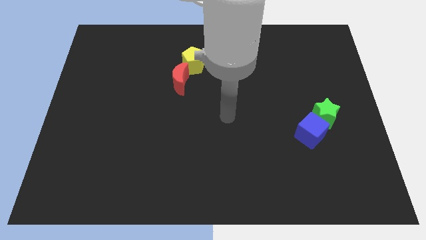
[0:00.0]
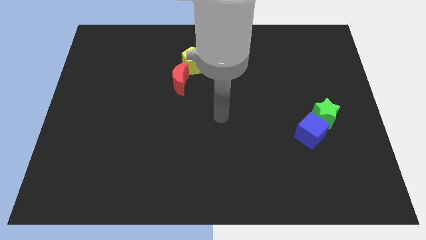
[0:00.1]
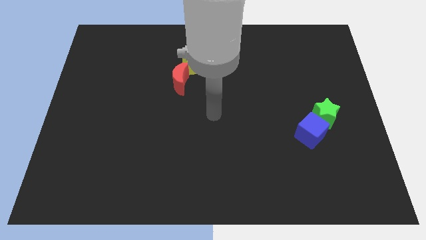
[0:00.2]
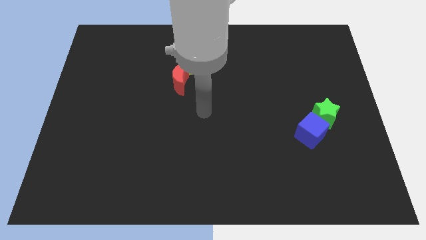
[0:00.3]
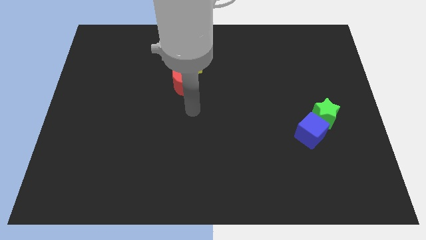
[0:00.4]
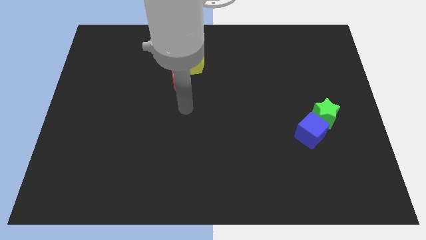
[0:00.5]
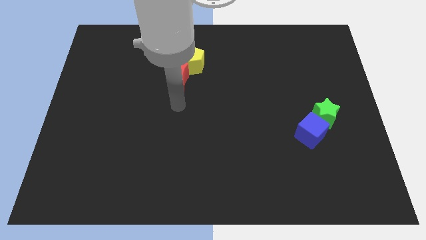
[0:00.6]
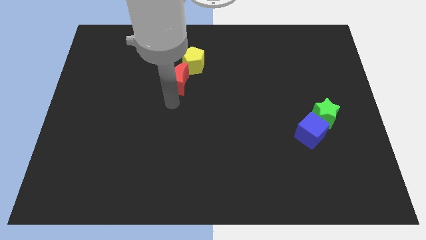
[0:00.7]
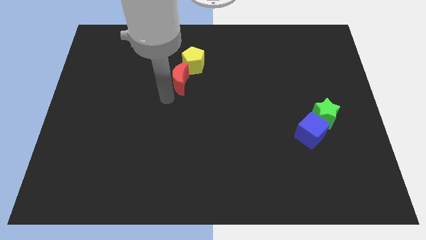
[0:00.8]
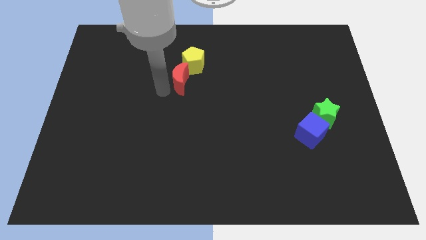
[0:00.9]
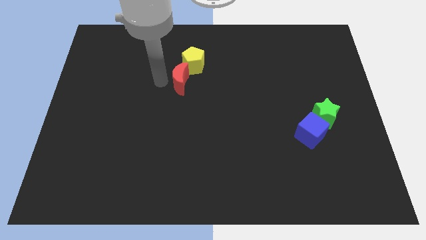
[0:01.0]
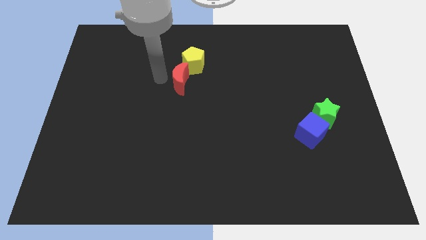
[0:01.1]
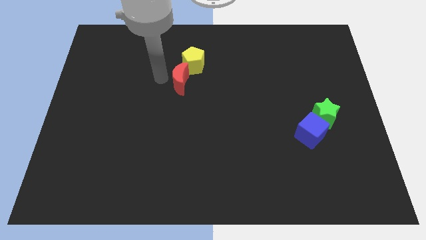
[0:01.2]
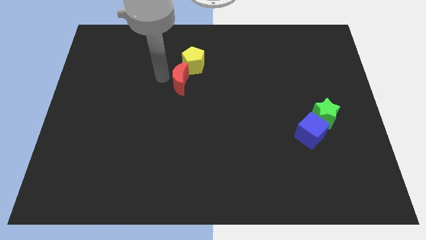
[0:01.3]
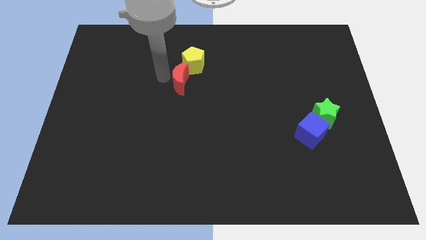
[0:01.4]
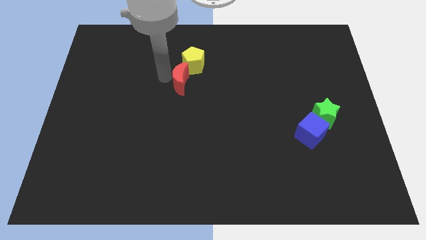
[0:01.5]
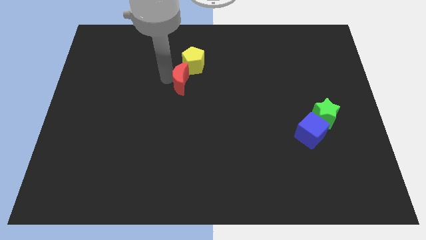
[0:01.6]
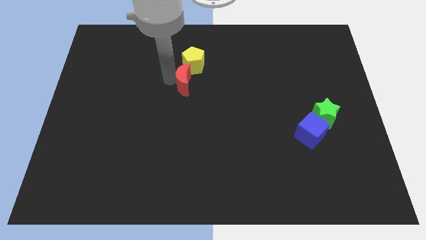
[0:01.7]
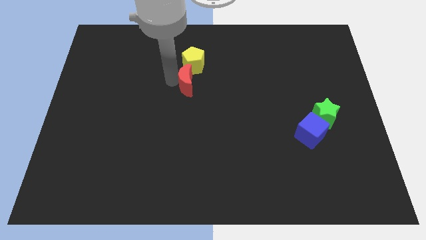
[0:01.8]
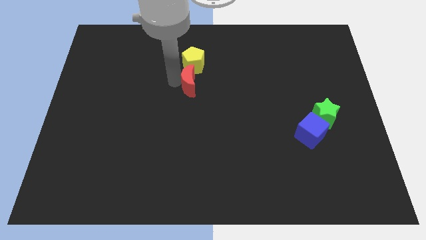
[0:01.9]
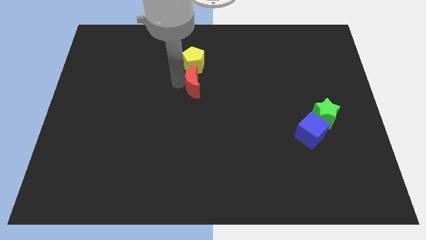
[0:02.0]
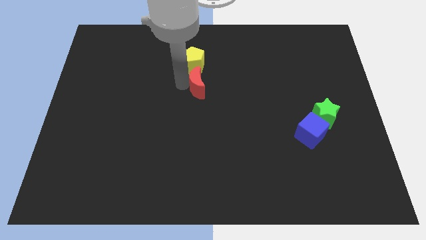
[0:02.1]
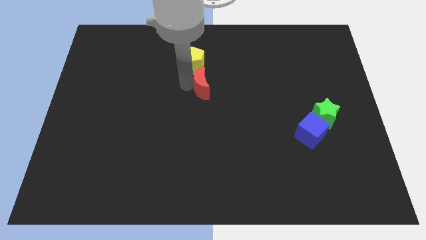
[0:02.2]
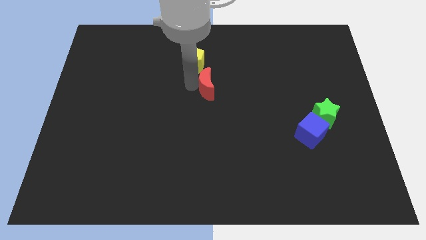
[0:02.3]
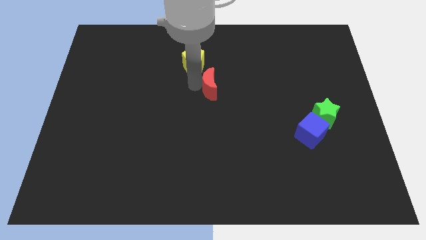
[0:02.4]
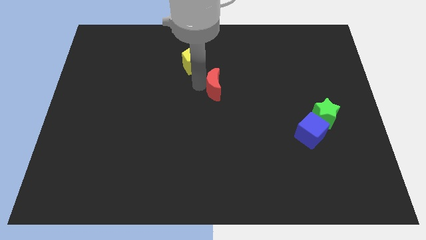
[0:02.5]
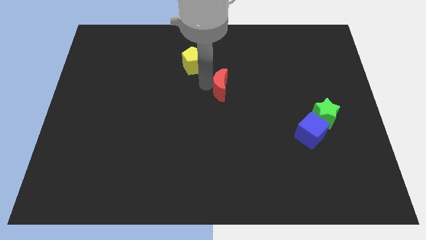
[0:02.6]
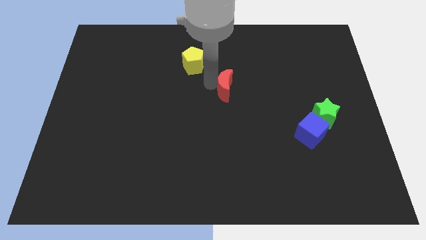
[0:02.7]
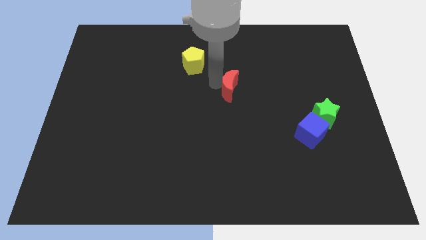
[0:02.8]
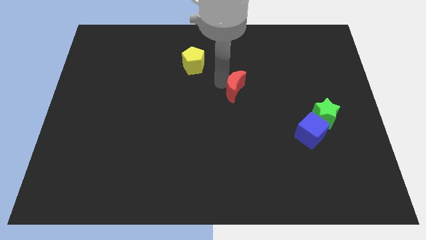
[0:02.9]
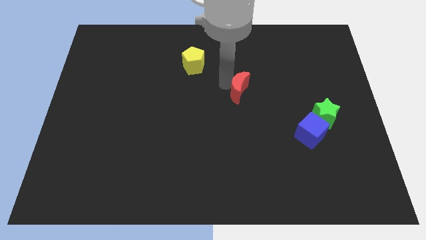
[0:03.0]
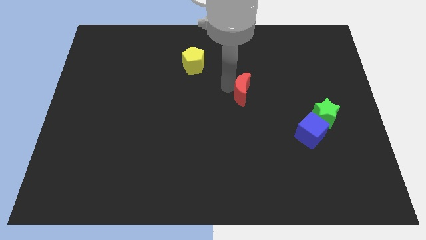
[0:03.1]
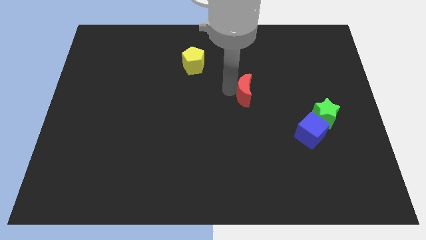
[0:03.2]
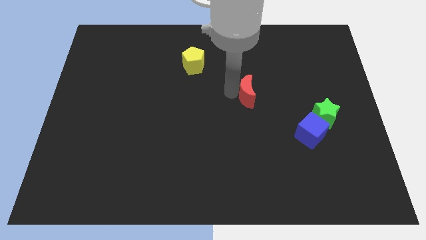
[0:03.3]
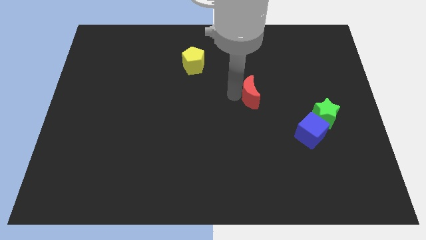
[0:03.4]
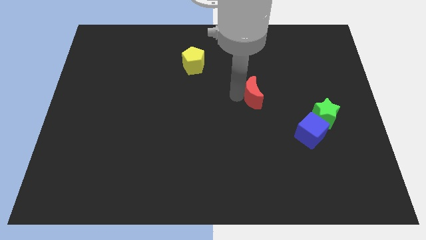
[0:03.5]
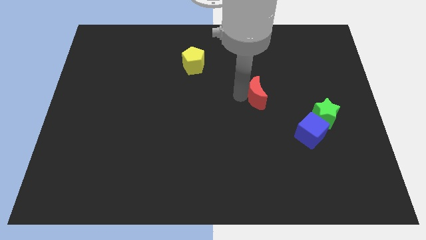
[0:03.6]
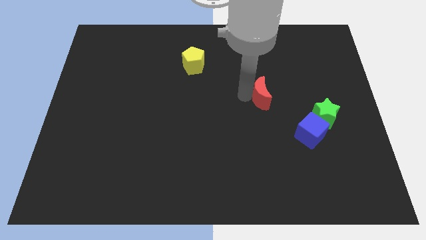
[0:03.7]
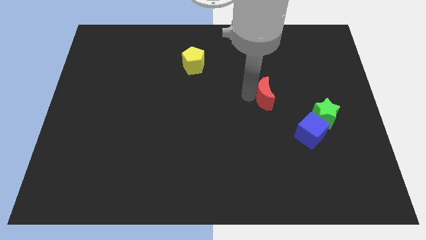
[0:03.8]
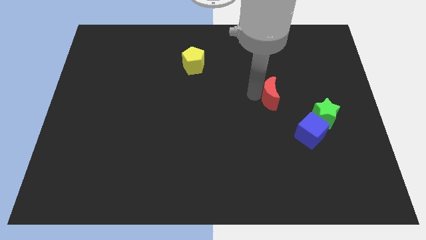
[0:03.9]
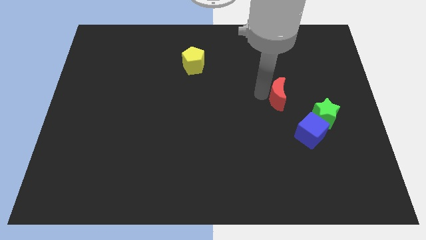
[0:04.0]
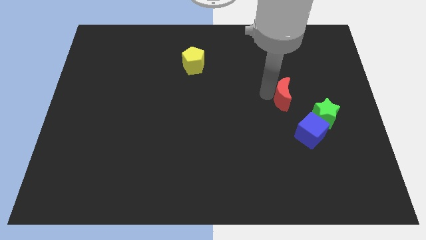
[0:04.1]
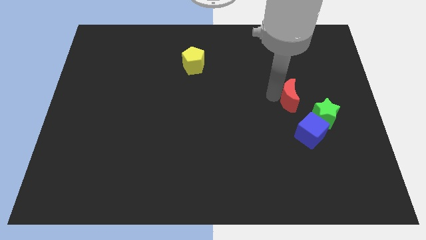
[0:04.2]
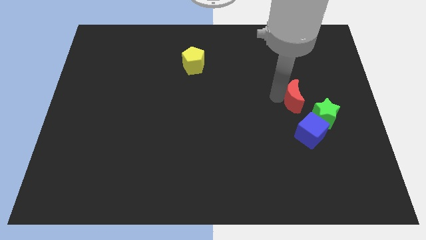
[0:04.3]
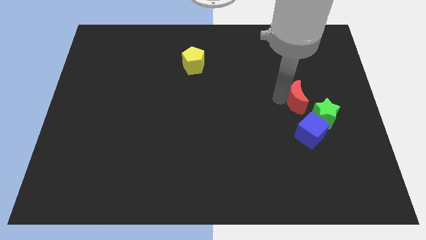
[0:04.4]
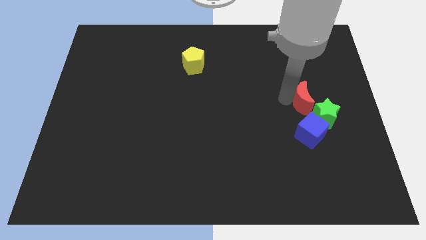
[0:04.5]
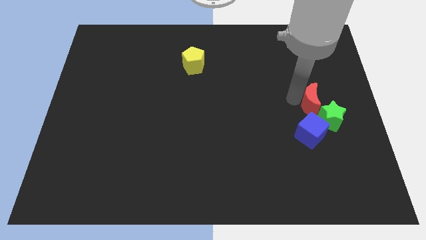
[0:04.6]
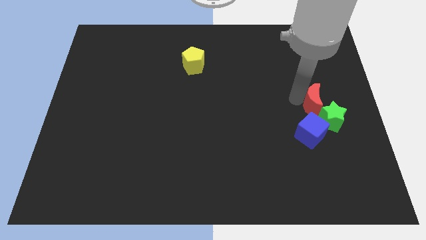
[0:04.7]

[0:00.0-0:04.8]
push the moon next to the green star

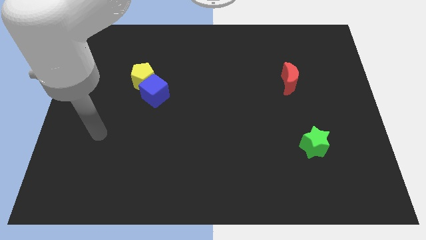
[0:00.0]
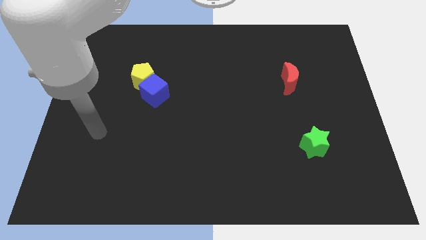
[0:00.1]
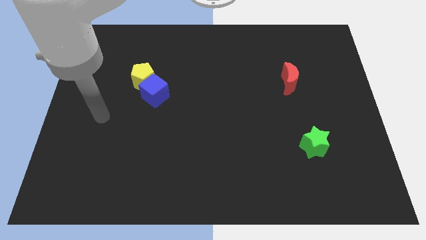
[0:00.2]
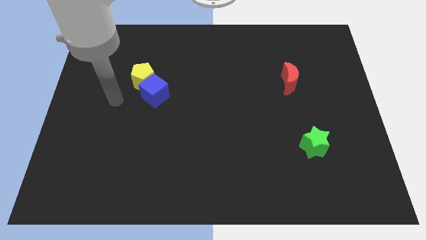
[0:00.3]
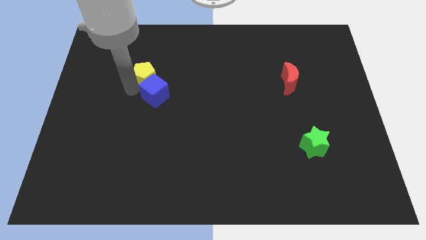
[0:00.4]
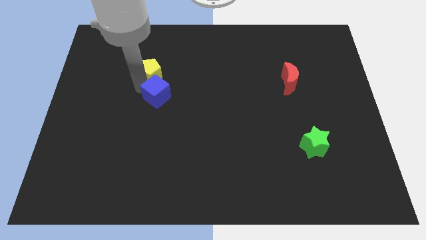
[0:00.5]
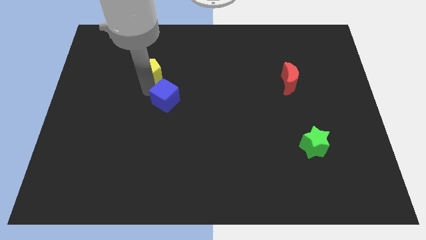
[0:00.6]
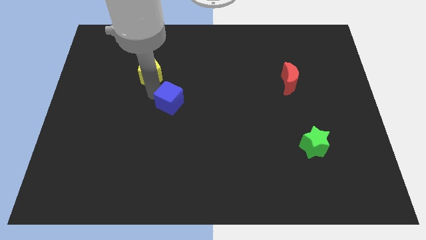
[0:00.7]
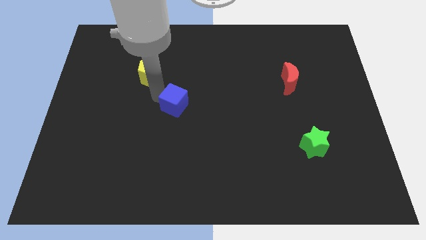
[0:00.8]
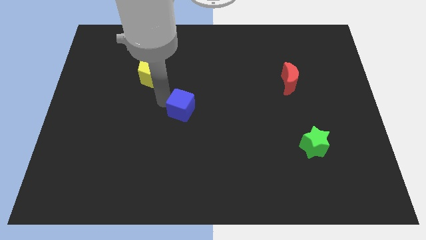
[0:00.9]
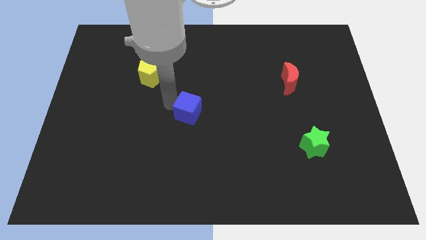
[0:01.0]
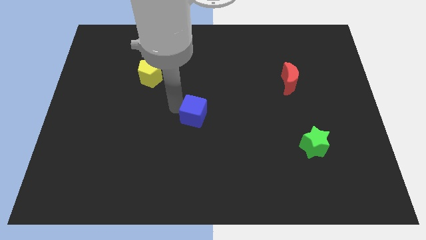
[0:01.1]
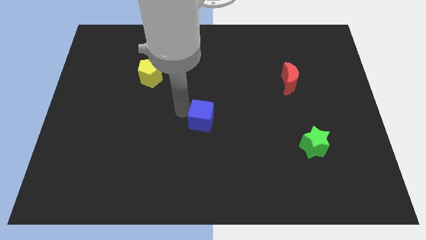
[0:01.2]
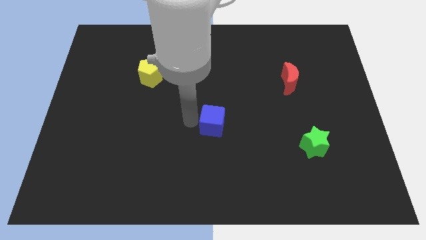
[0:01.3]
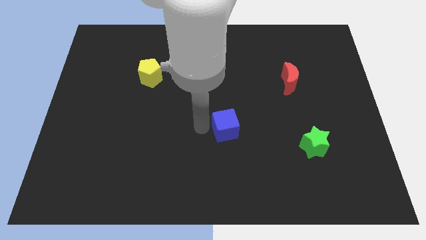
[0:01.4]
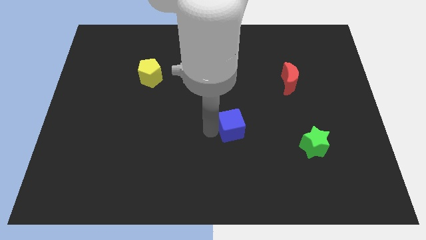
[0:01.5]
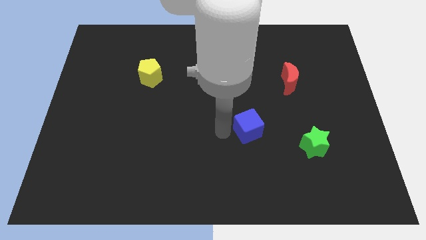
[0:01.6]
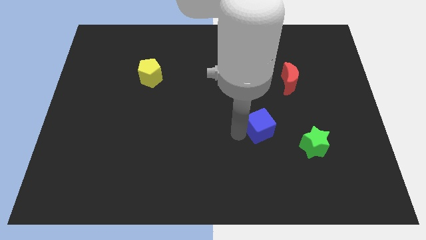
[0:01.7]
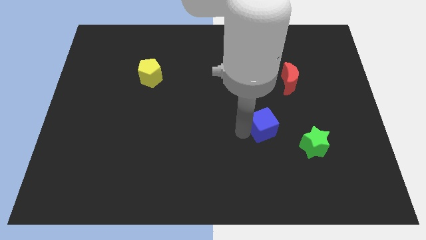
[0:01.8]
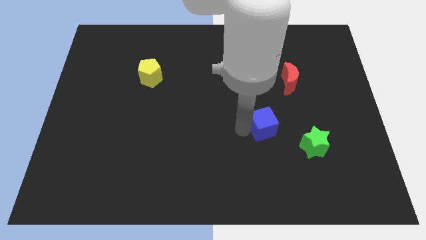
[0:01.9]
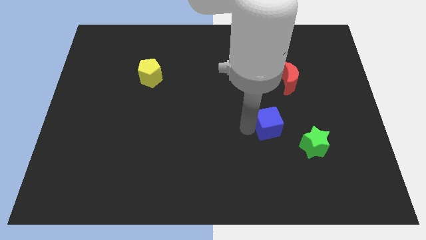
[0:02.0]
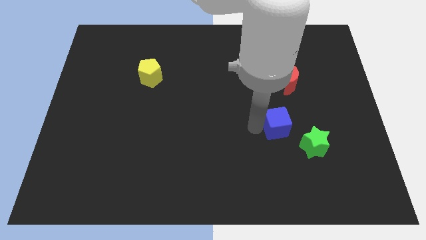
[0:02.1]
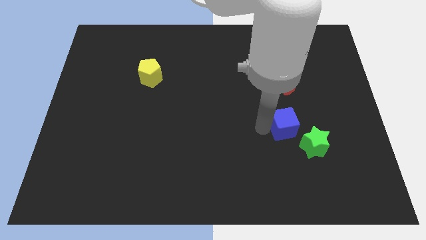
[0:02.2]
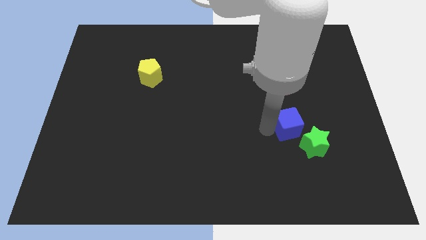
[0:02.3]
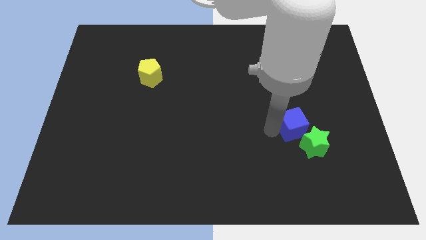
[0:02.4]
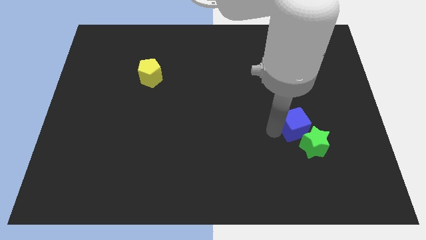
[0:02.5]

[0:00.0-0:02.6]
put the cube close to the star

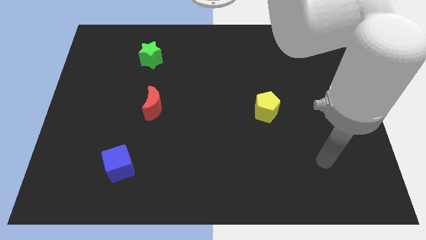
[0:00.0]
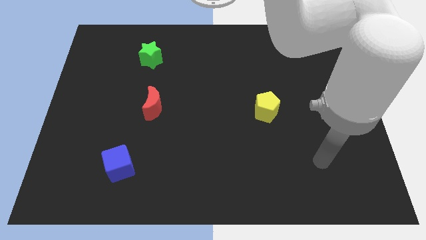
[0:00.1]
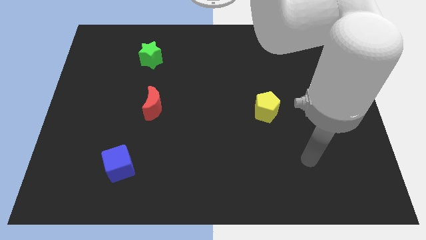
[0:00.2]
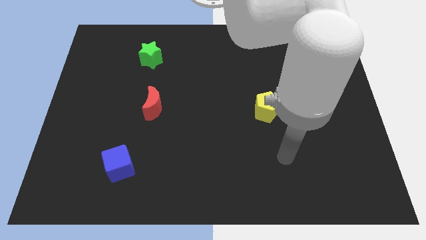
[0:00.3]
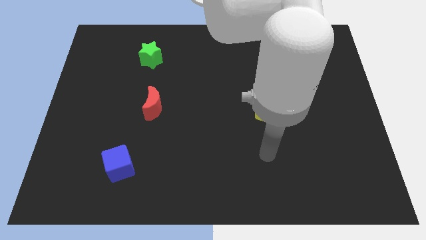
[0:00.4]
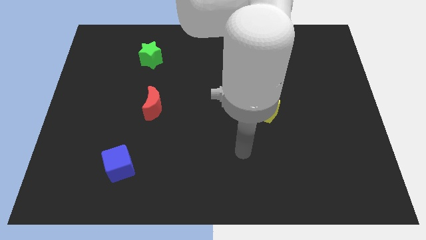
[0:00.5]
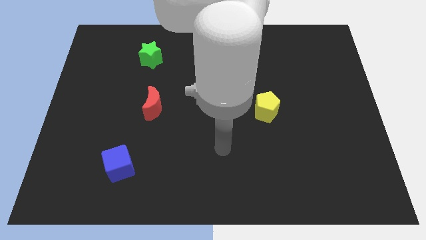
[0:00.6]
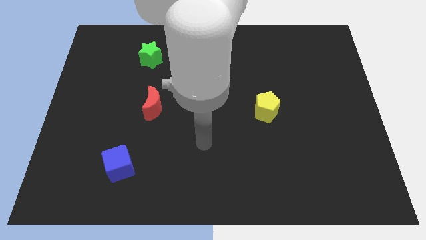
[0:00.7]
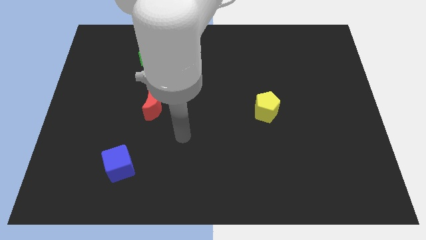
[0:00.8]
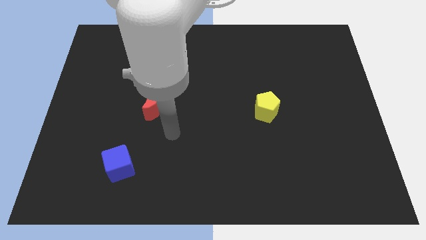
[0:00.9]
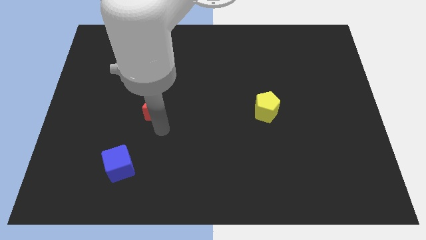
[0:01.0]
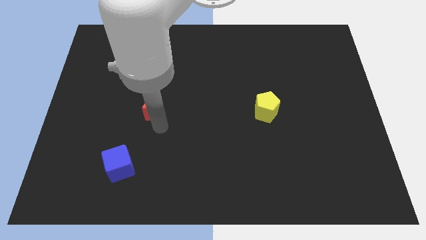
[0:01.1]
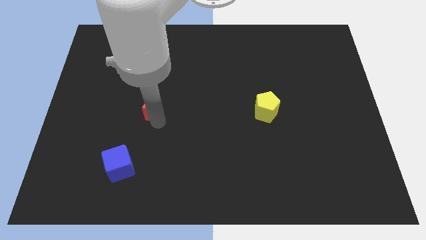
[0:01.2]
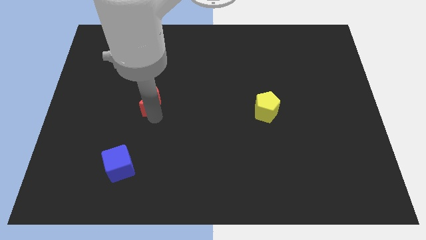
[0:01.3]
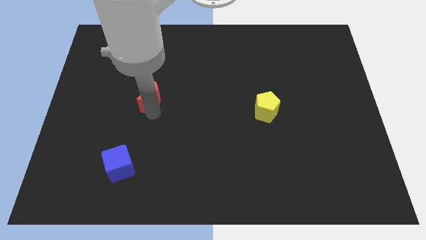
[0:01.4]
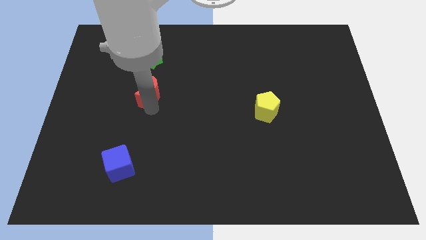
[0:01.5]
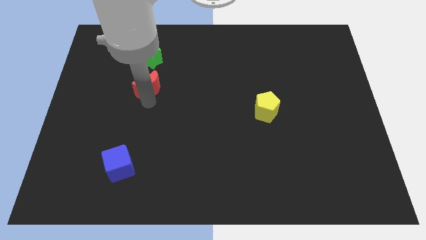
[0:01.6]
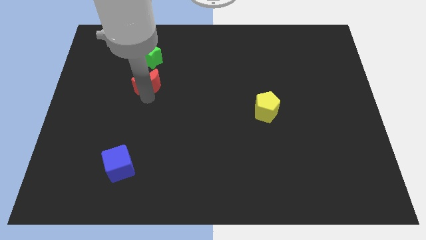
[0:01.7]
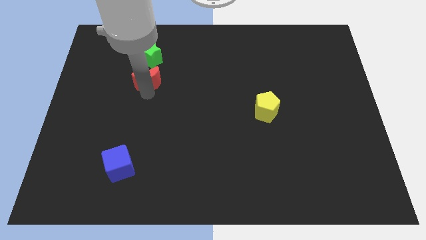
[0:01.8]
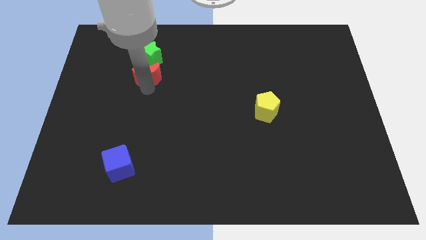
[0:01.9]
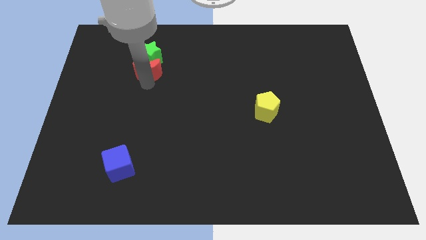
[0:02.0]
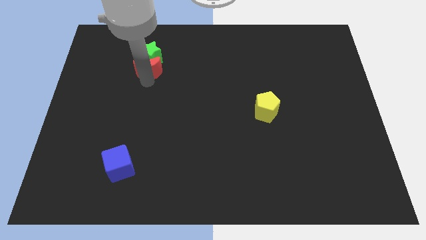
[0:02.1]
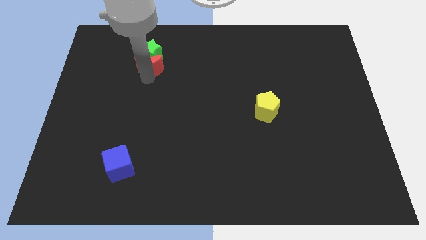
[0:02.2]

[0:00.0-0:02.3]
slide the red block to the star
